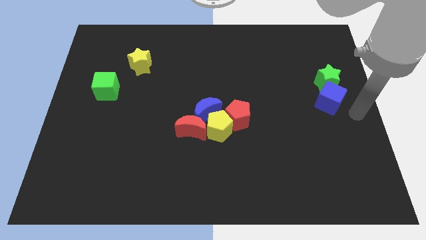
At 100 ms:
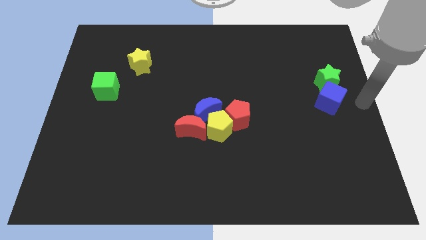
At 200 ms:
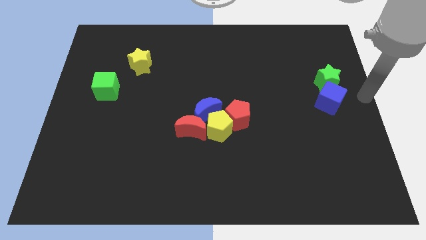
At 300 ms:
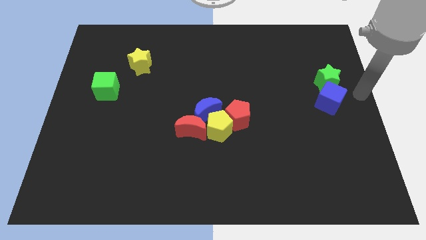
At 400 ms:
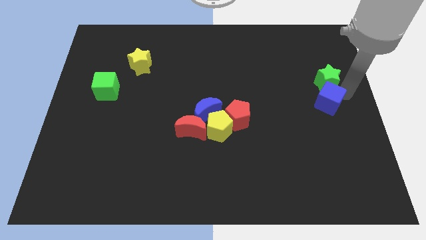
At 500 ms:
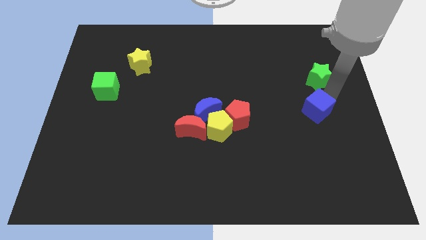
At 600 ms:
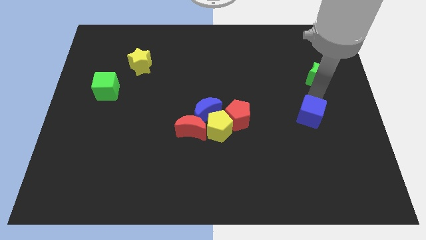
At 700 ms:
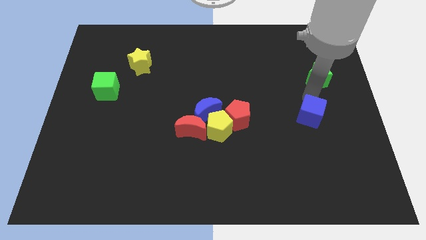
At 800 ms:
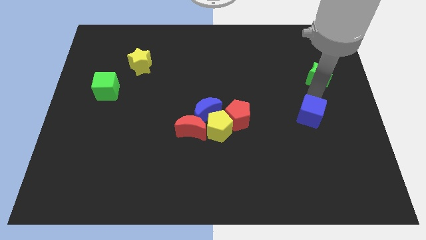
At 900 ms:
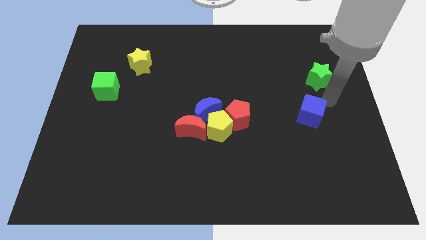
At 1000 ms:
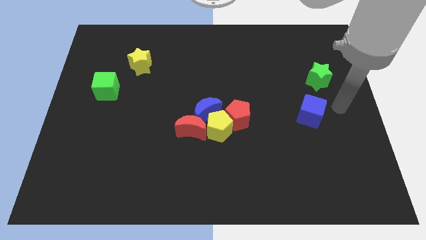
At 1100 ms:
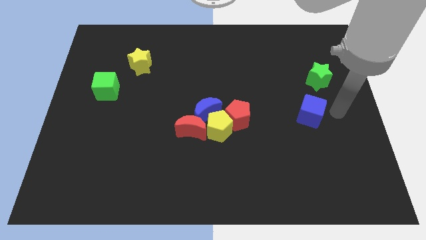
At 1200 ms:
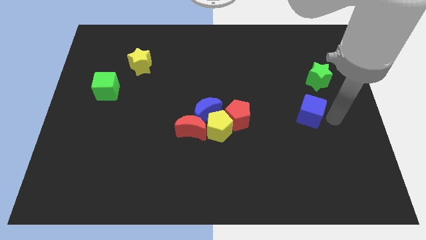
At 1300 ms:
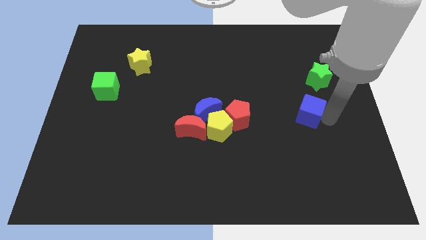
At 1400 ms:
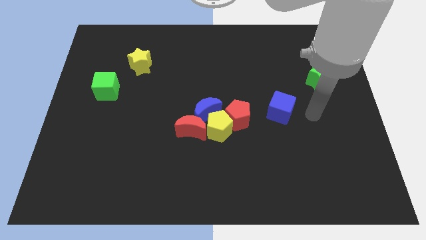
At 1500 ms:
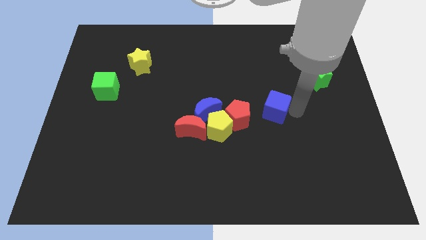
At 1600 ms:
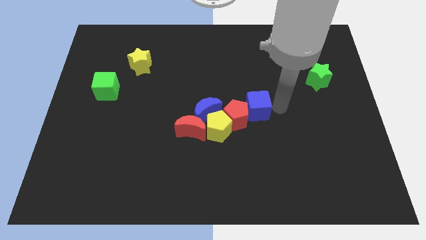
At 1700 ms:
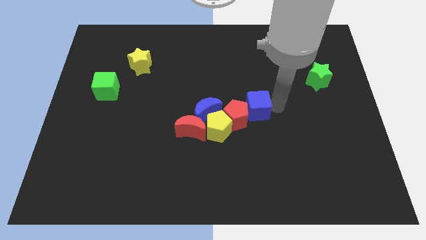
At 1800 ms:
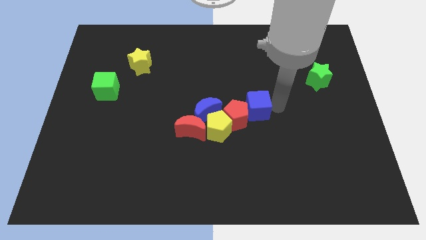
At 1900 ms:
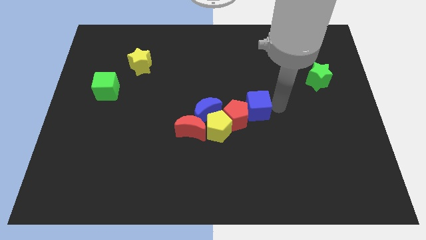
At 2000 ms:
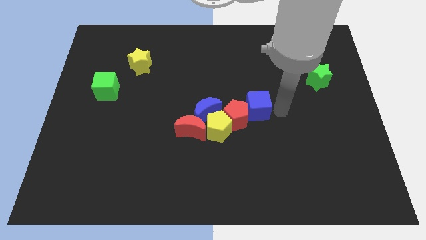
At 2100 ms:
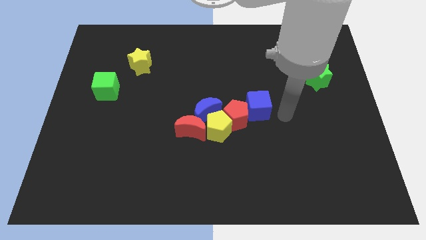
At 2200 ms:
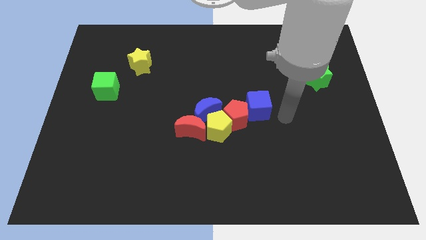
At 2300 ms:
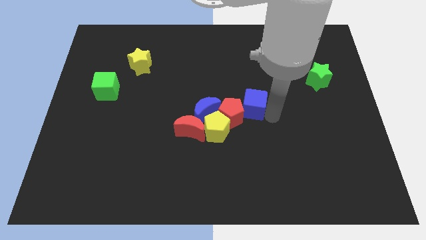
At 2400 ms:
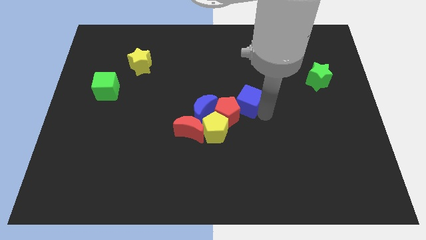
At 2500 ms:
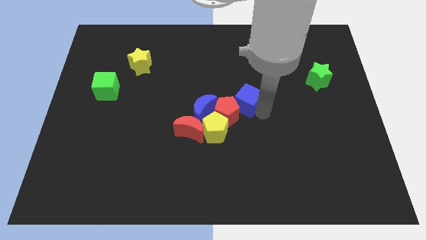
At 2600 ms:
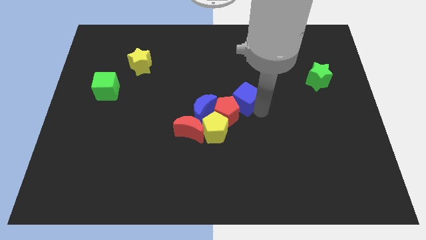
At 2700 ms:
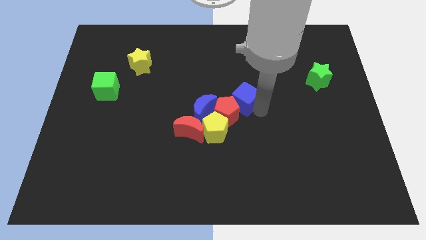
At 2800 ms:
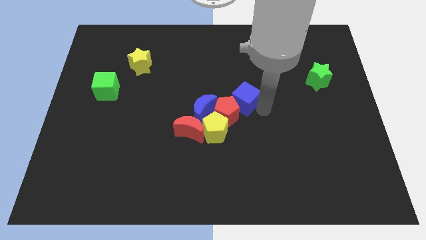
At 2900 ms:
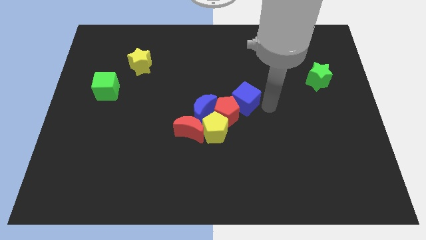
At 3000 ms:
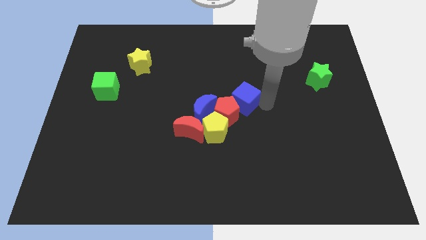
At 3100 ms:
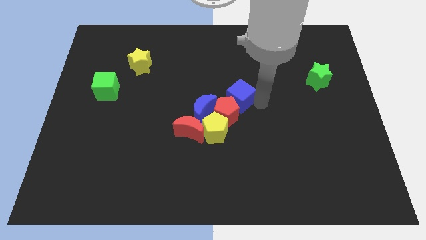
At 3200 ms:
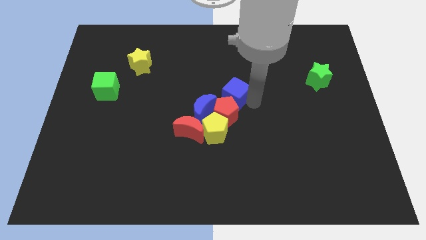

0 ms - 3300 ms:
move blue cube diagonally above red pentagon

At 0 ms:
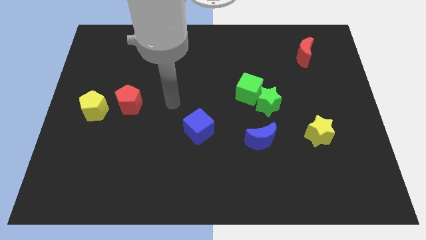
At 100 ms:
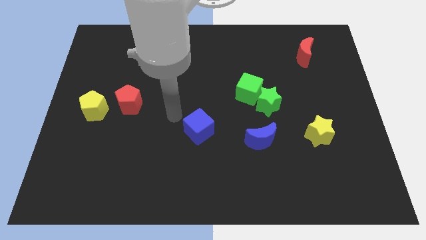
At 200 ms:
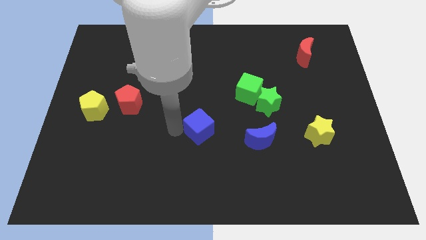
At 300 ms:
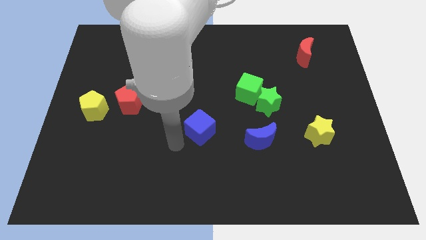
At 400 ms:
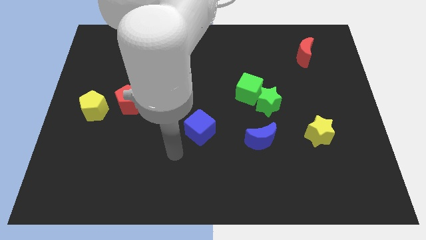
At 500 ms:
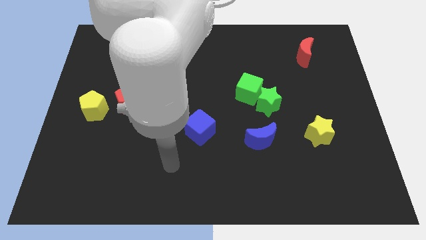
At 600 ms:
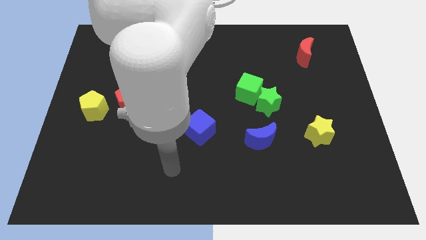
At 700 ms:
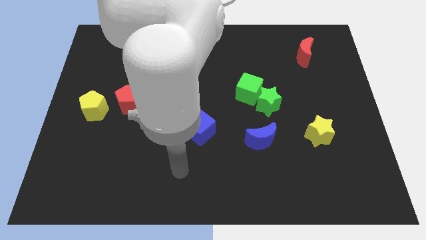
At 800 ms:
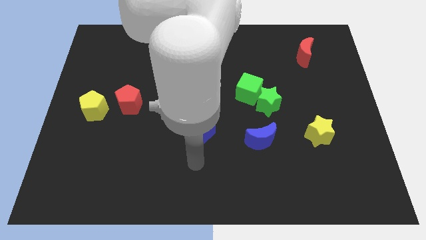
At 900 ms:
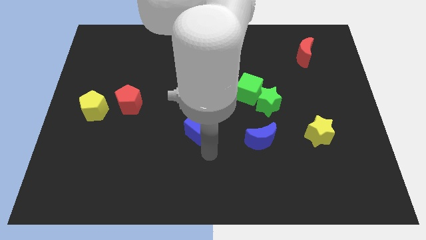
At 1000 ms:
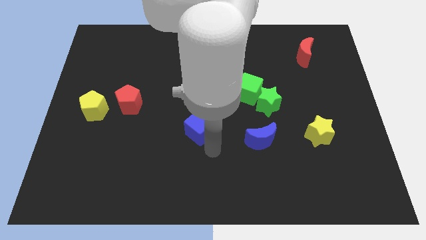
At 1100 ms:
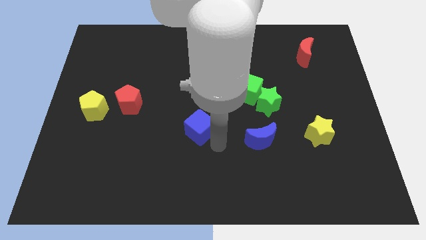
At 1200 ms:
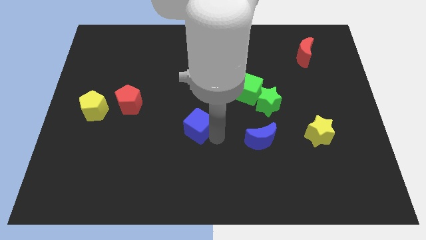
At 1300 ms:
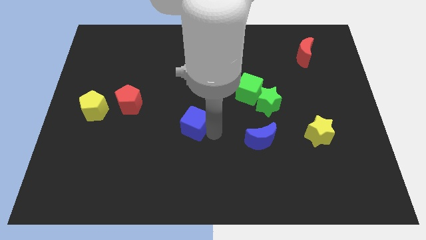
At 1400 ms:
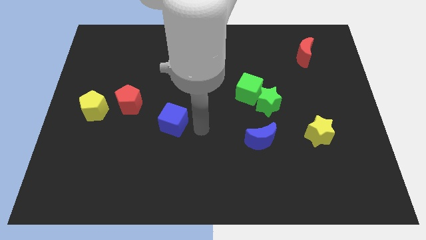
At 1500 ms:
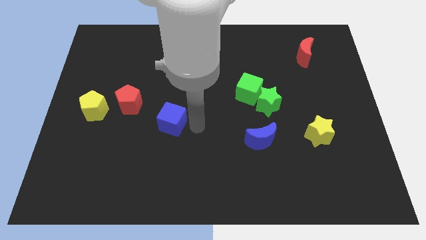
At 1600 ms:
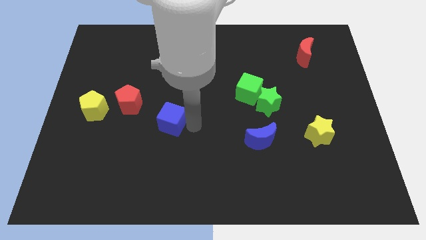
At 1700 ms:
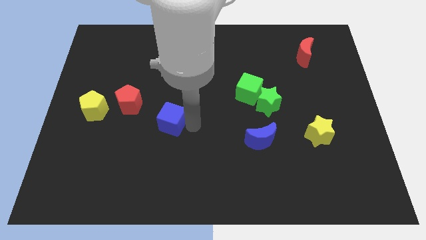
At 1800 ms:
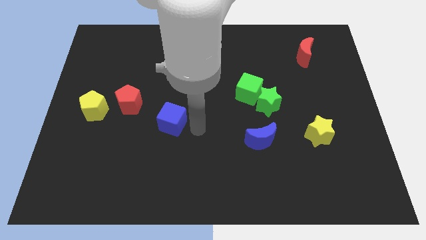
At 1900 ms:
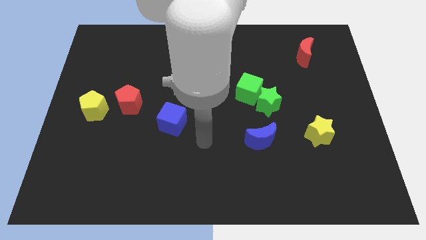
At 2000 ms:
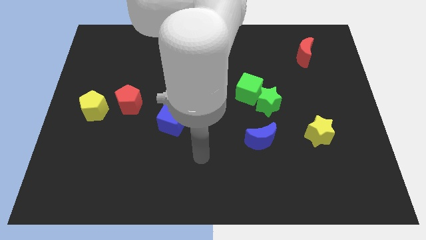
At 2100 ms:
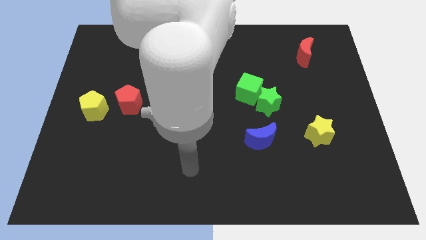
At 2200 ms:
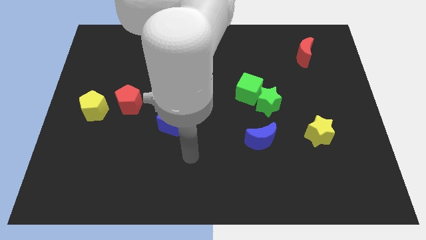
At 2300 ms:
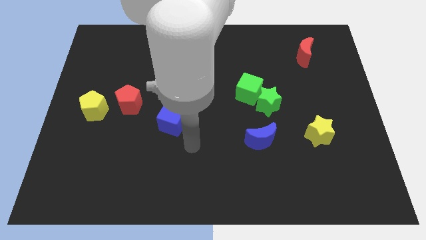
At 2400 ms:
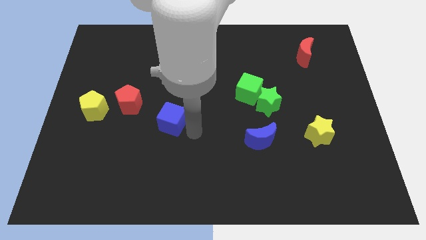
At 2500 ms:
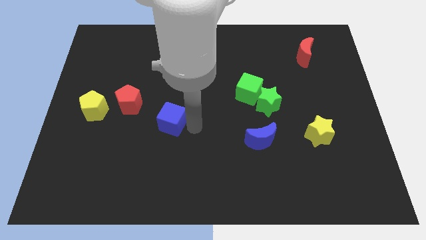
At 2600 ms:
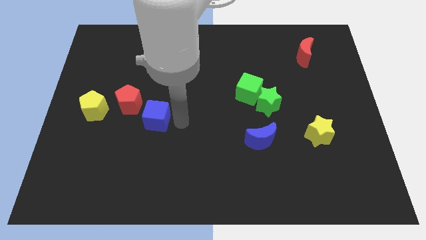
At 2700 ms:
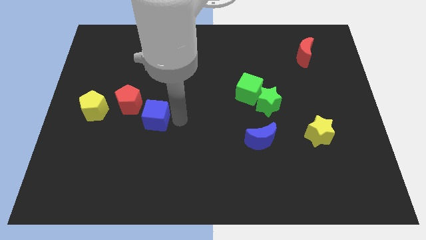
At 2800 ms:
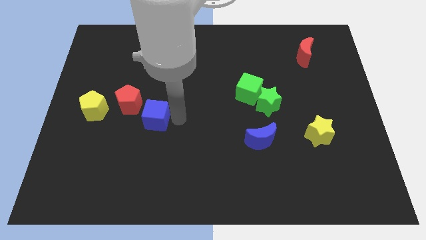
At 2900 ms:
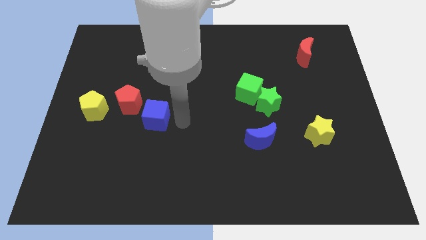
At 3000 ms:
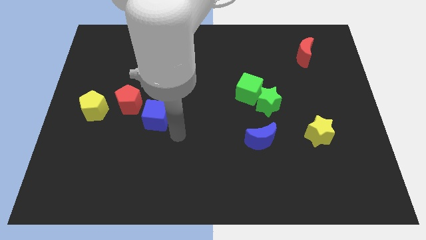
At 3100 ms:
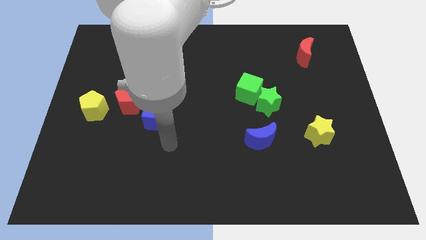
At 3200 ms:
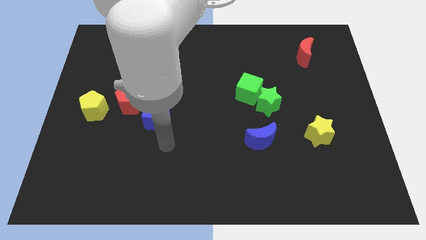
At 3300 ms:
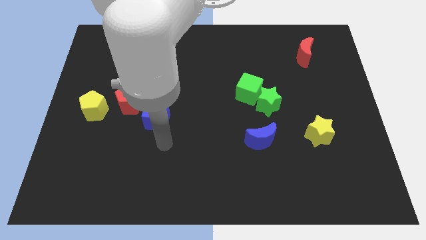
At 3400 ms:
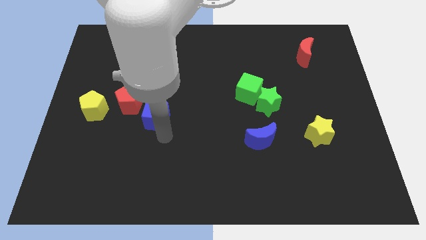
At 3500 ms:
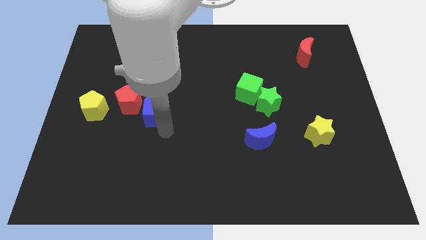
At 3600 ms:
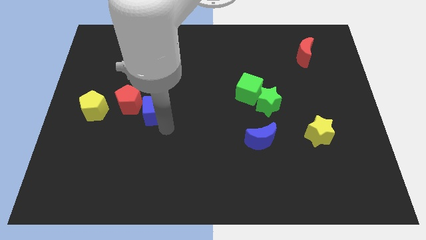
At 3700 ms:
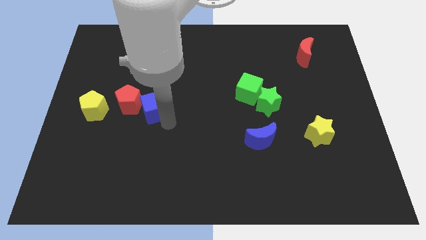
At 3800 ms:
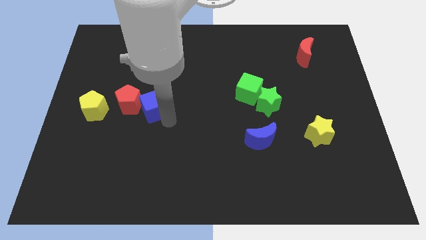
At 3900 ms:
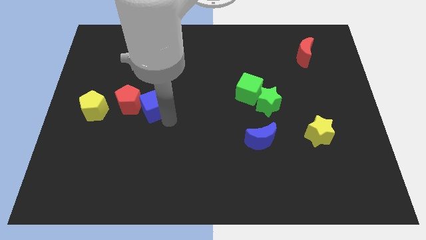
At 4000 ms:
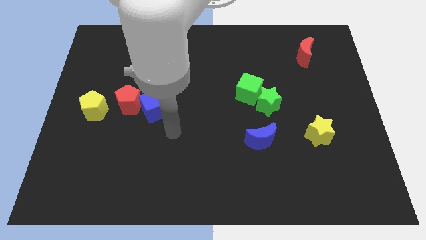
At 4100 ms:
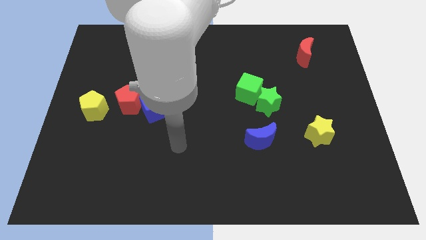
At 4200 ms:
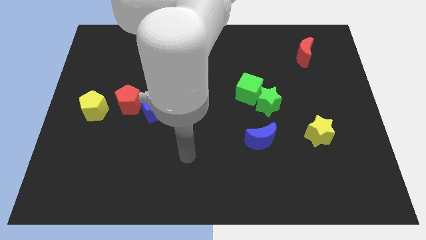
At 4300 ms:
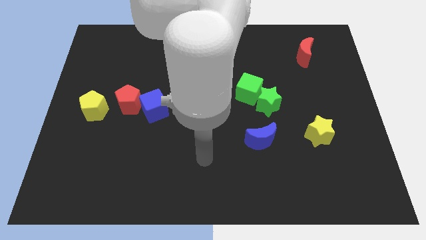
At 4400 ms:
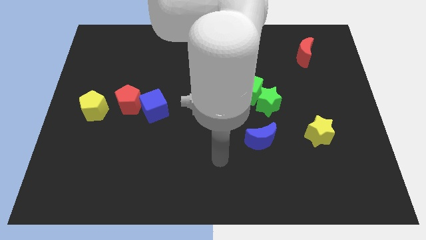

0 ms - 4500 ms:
push the blue cube to the right of the red pentagon

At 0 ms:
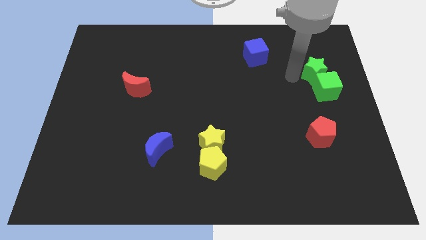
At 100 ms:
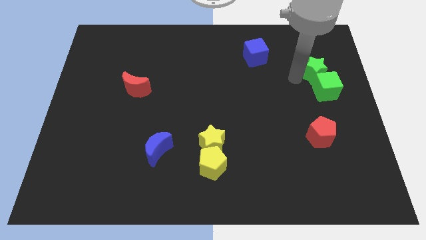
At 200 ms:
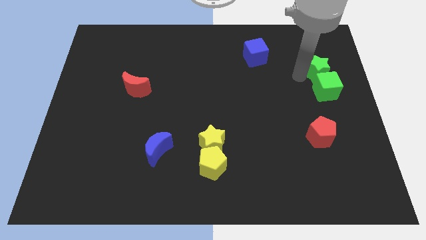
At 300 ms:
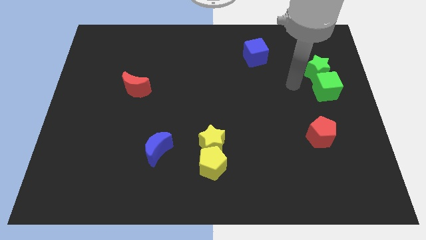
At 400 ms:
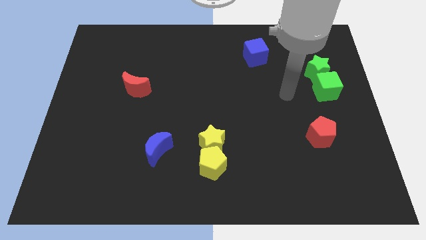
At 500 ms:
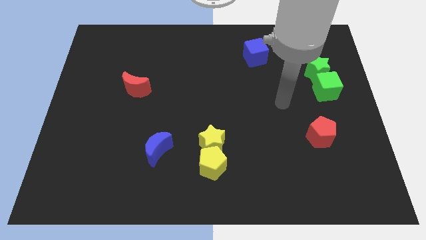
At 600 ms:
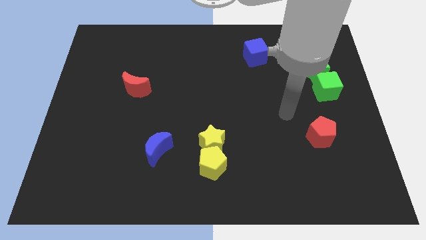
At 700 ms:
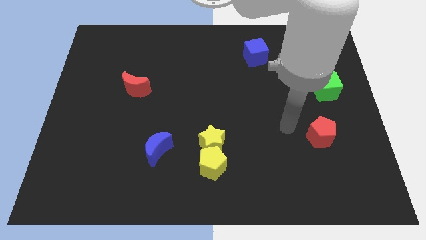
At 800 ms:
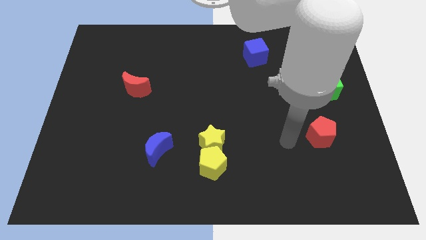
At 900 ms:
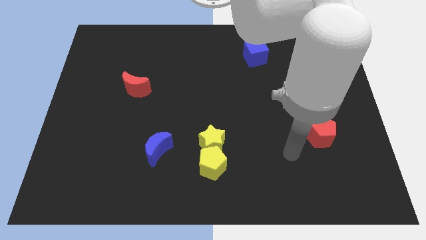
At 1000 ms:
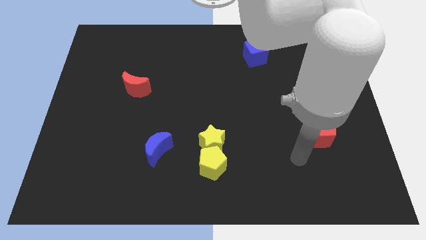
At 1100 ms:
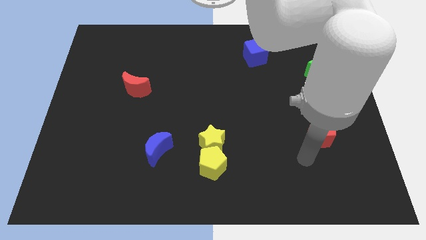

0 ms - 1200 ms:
move your arm towards red pentagon

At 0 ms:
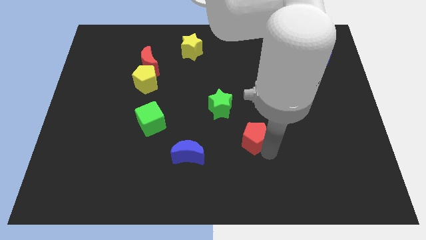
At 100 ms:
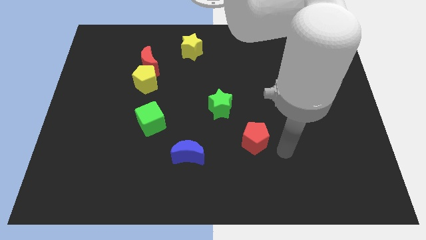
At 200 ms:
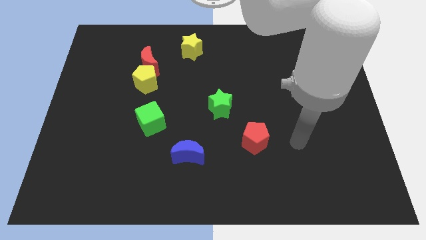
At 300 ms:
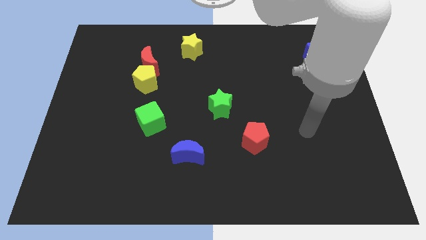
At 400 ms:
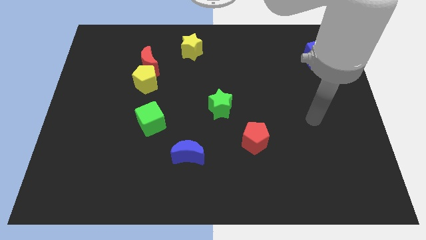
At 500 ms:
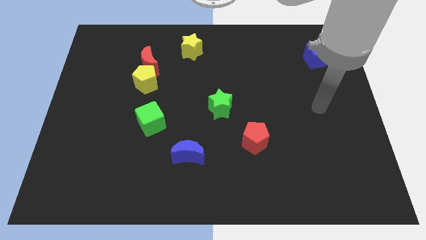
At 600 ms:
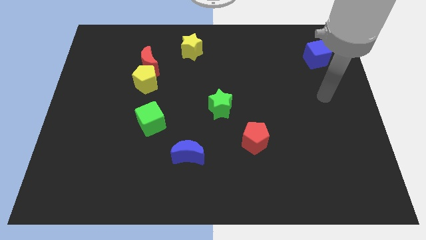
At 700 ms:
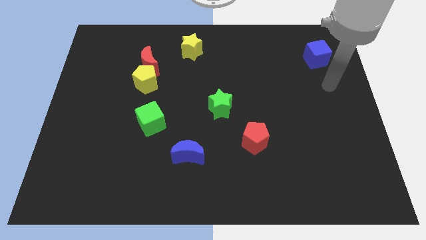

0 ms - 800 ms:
move the arm away from the red pentagon
